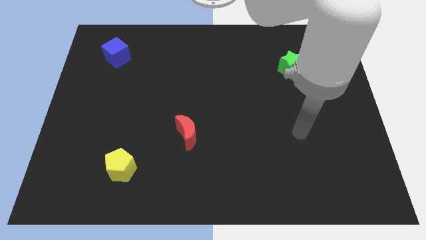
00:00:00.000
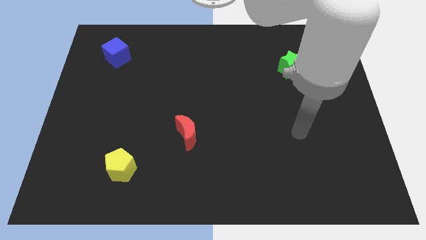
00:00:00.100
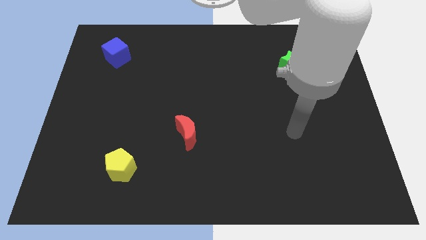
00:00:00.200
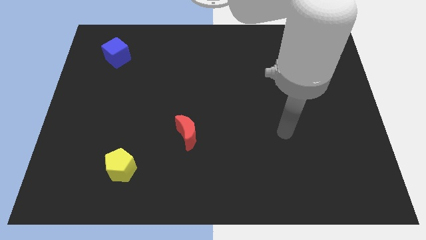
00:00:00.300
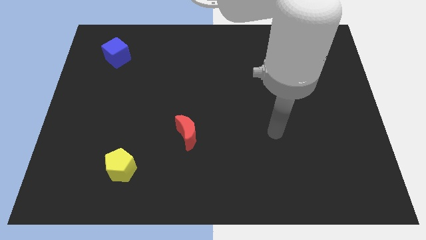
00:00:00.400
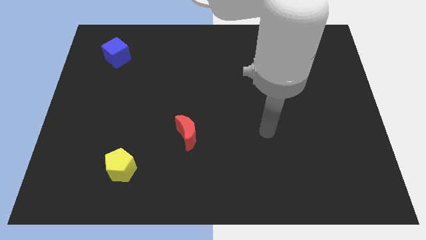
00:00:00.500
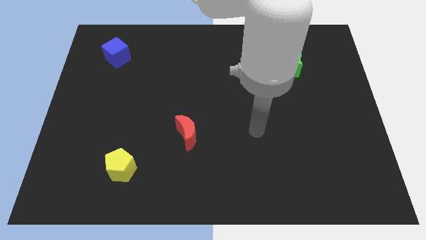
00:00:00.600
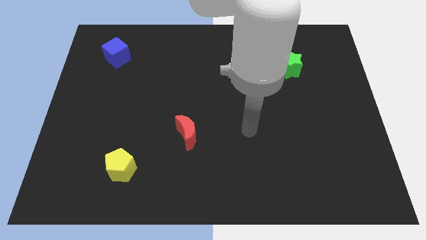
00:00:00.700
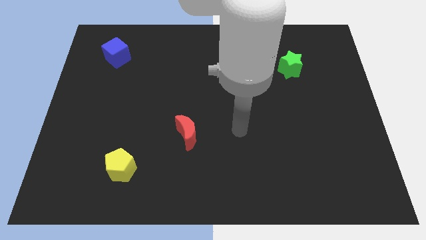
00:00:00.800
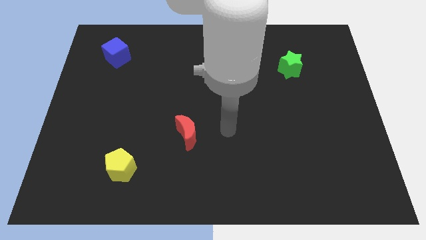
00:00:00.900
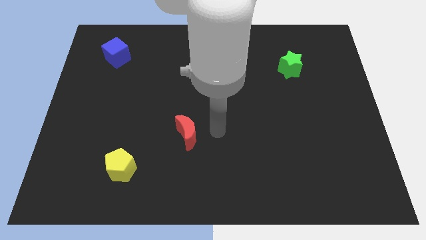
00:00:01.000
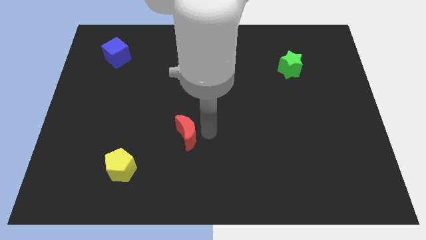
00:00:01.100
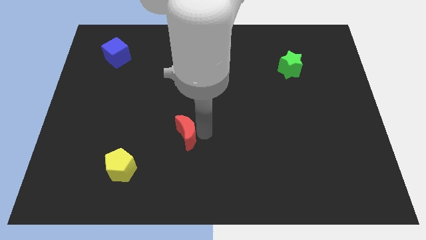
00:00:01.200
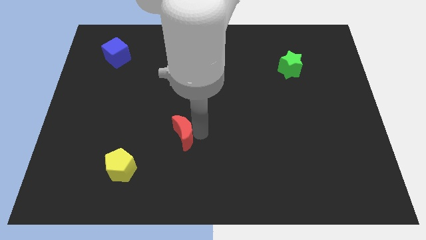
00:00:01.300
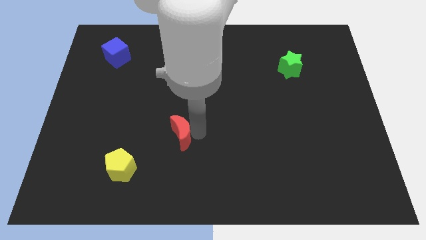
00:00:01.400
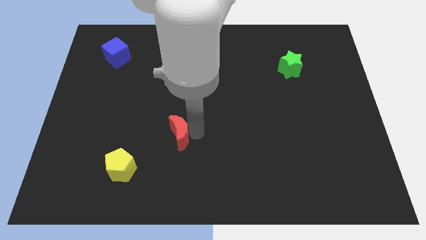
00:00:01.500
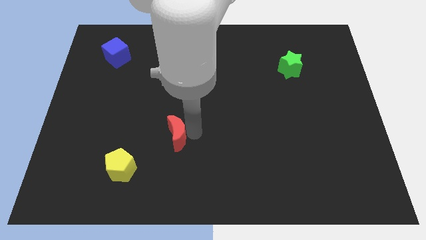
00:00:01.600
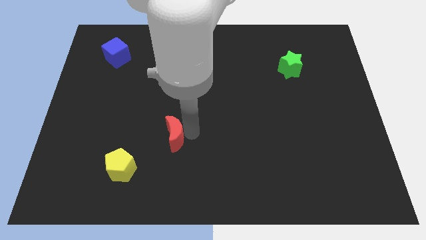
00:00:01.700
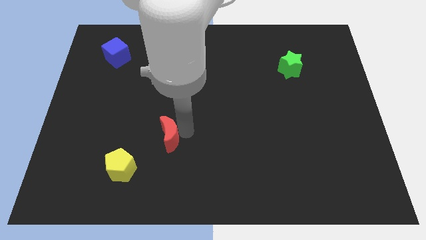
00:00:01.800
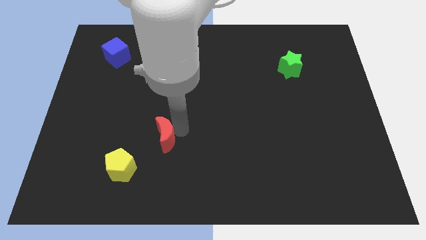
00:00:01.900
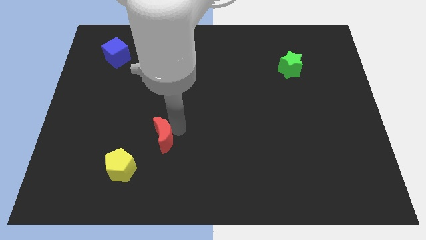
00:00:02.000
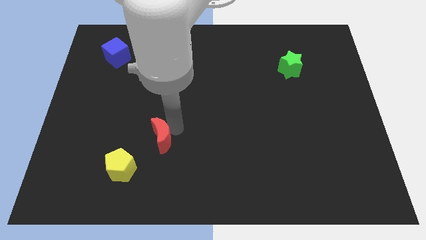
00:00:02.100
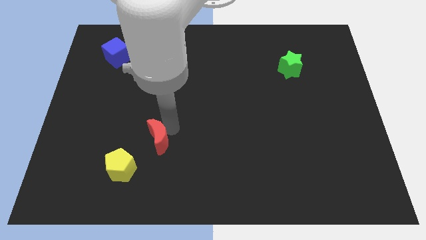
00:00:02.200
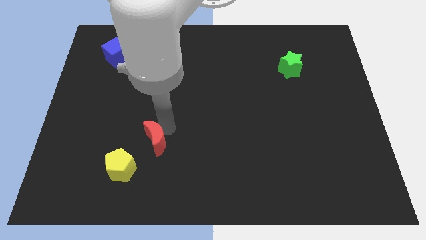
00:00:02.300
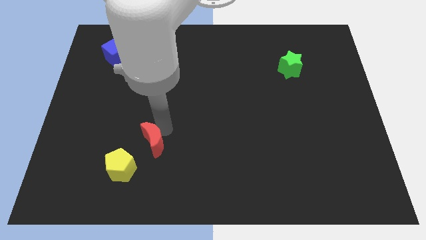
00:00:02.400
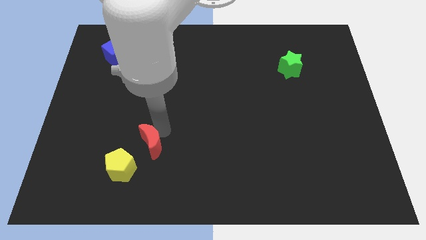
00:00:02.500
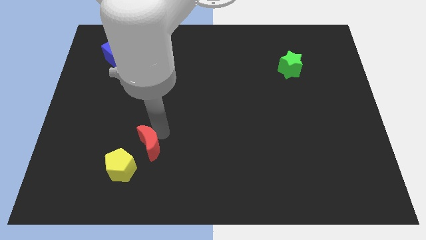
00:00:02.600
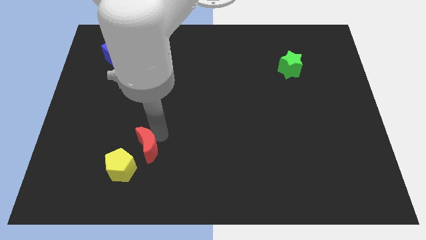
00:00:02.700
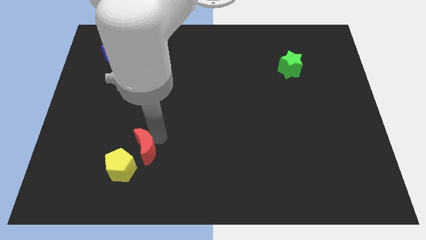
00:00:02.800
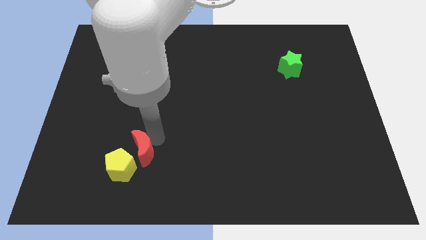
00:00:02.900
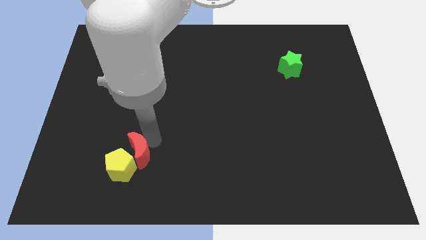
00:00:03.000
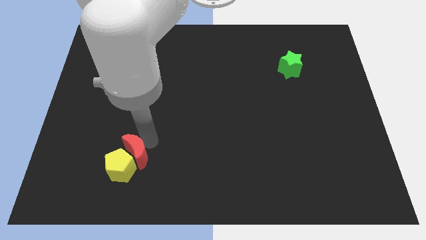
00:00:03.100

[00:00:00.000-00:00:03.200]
put the red moon next to the yellow pentagon

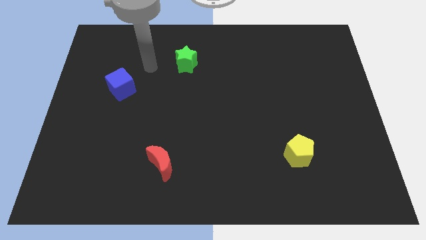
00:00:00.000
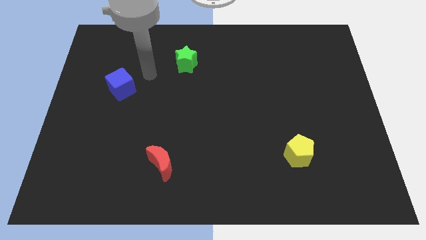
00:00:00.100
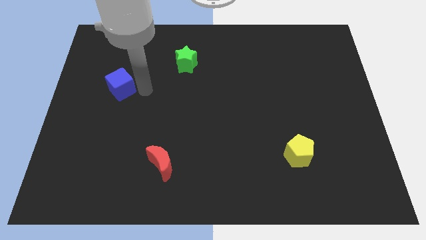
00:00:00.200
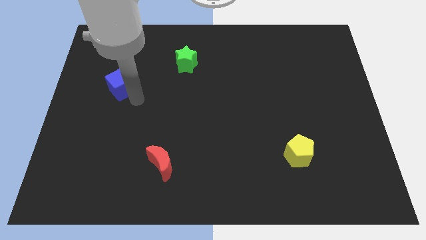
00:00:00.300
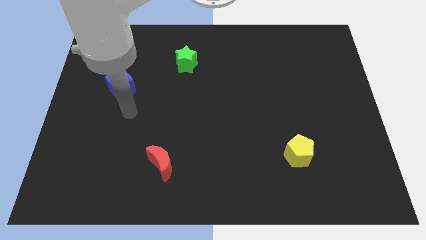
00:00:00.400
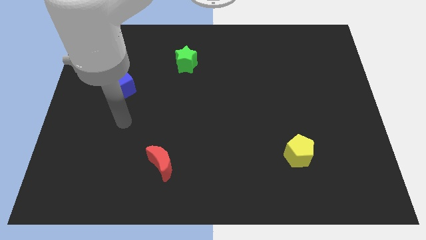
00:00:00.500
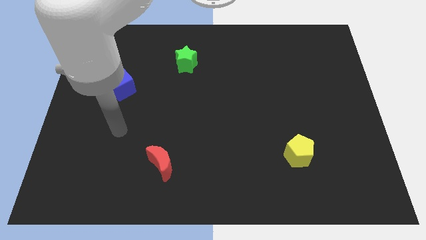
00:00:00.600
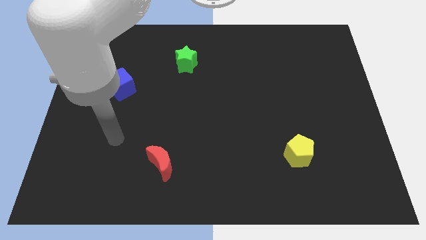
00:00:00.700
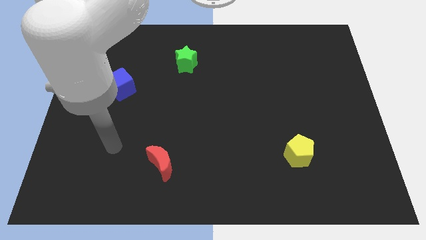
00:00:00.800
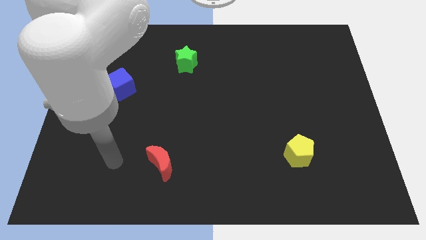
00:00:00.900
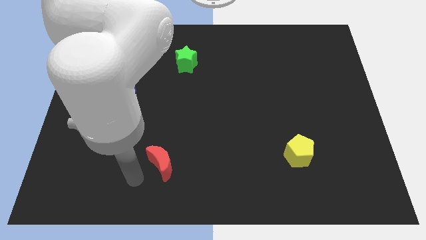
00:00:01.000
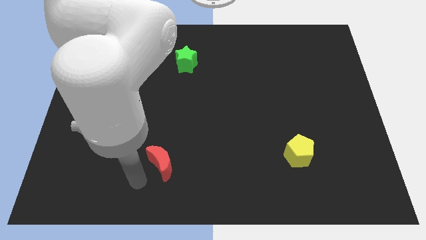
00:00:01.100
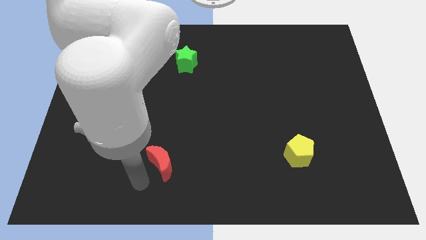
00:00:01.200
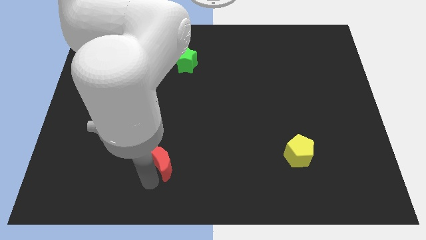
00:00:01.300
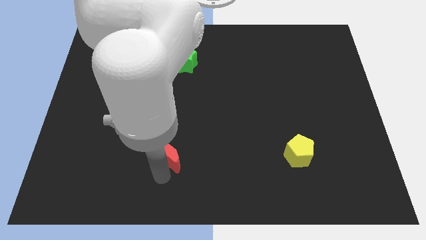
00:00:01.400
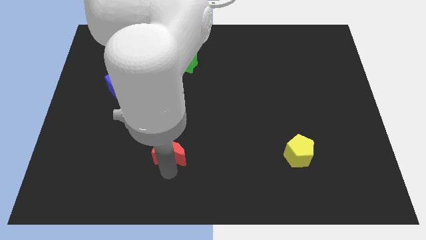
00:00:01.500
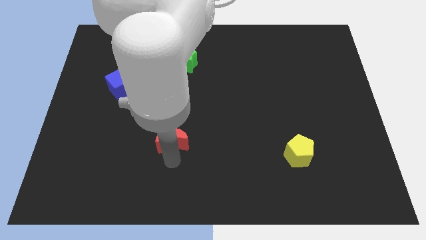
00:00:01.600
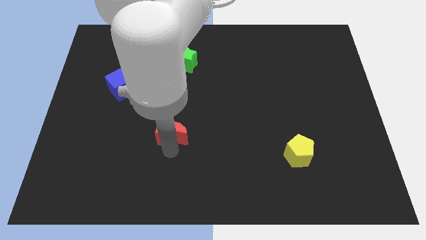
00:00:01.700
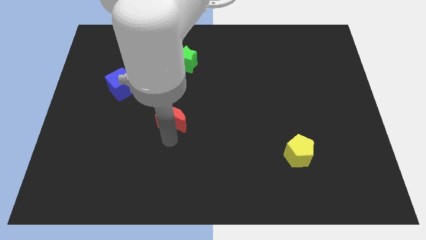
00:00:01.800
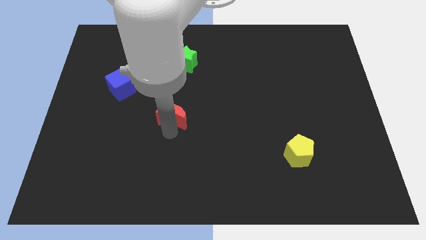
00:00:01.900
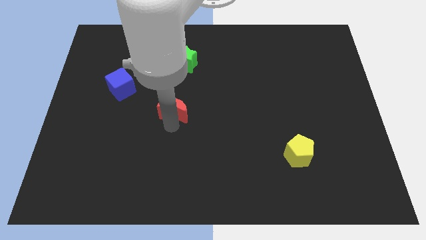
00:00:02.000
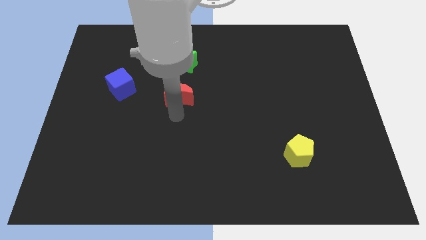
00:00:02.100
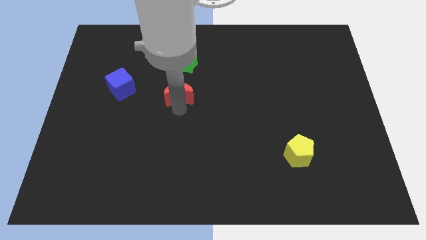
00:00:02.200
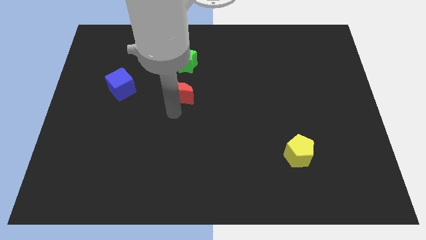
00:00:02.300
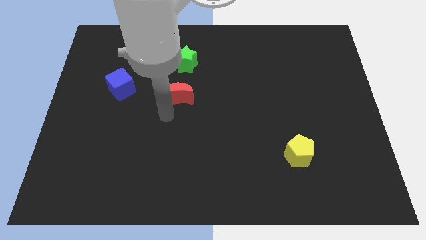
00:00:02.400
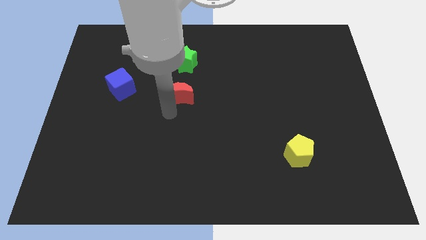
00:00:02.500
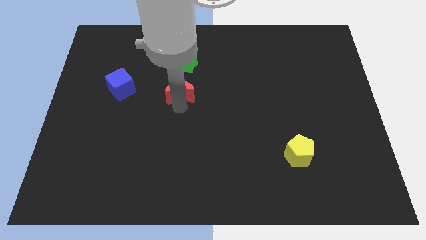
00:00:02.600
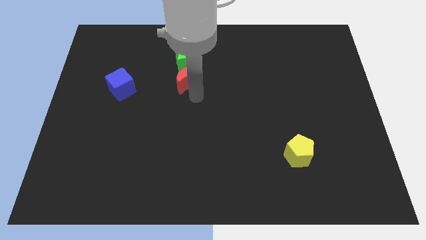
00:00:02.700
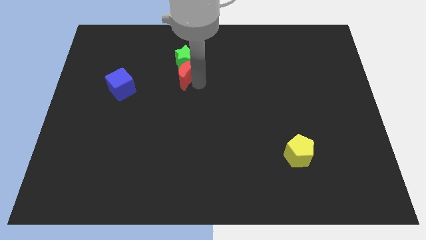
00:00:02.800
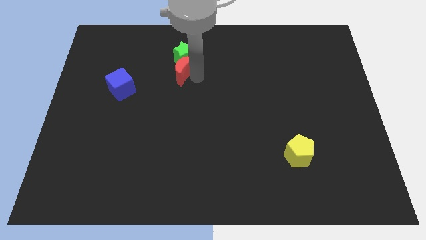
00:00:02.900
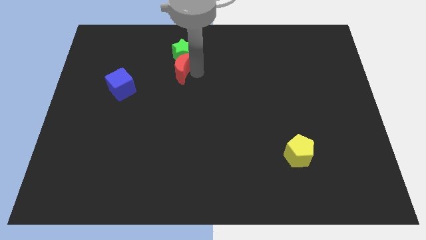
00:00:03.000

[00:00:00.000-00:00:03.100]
slide the red moon close to the green star

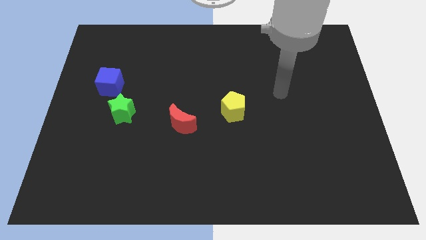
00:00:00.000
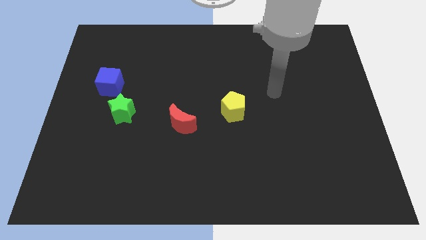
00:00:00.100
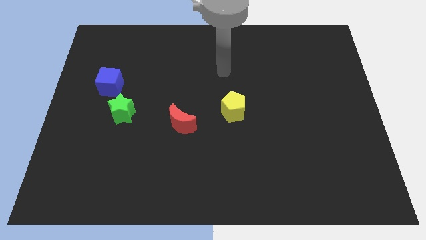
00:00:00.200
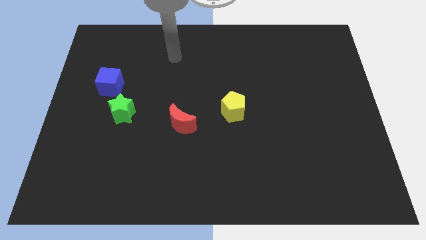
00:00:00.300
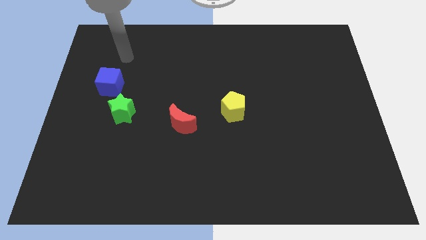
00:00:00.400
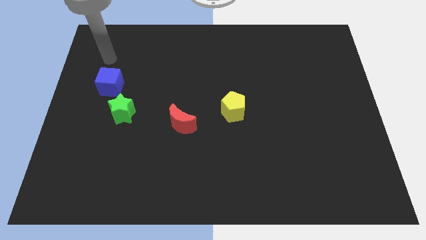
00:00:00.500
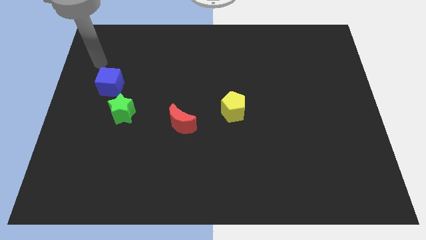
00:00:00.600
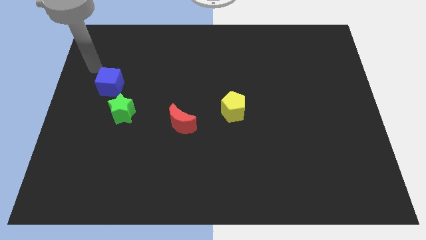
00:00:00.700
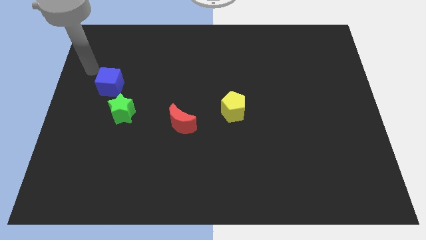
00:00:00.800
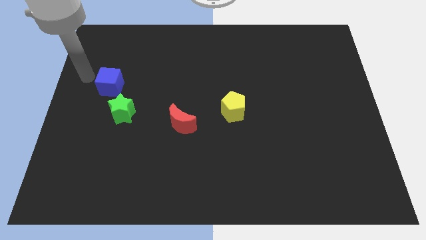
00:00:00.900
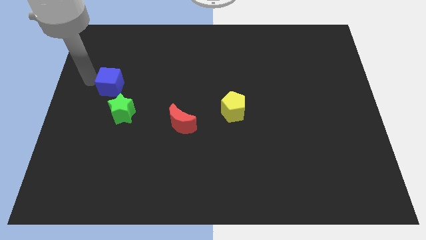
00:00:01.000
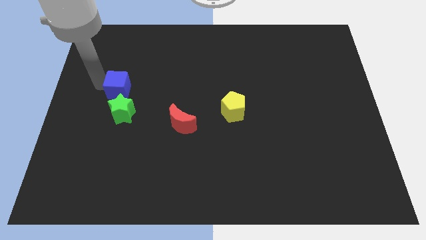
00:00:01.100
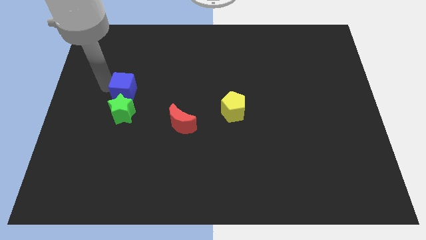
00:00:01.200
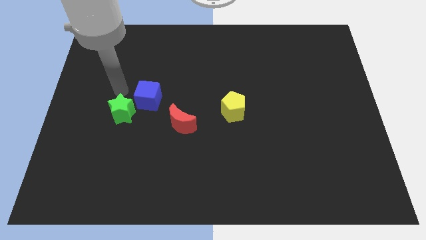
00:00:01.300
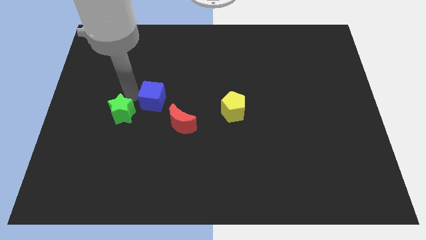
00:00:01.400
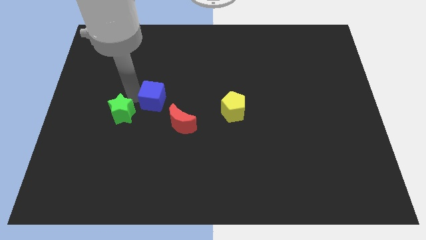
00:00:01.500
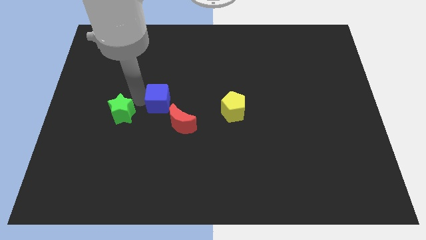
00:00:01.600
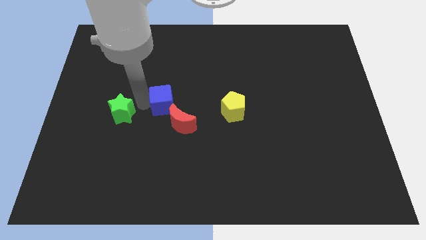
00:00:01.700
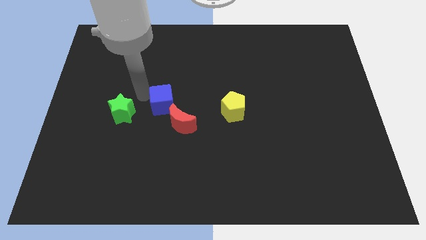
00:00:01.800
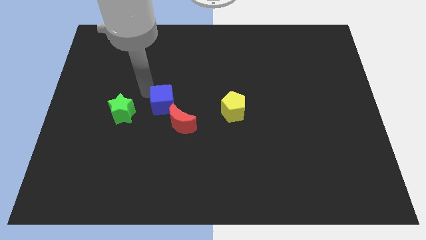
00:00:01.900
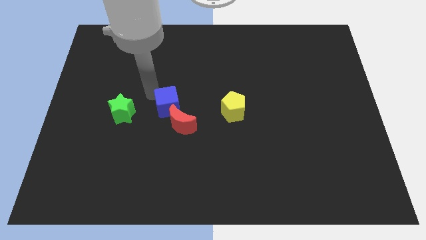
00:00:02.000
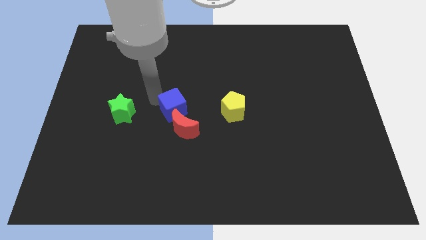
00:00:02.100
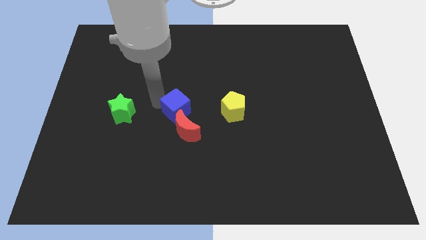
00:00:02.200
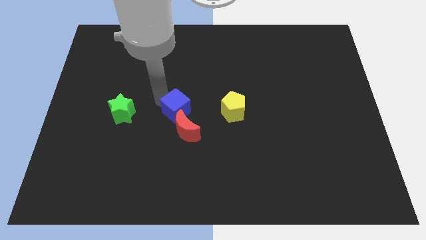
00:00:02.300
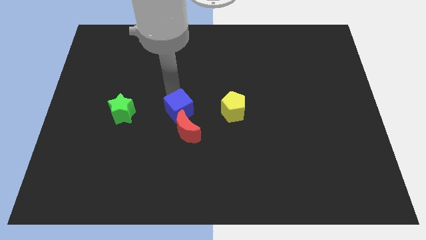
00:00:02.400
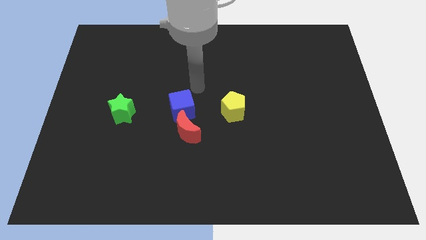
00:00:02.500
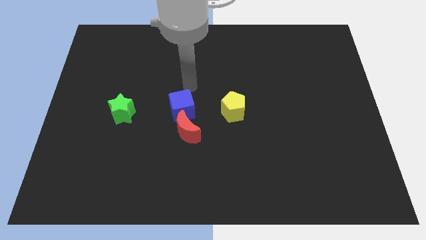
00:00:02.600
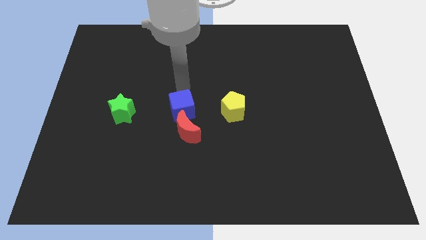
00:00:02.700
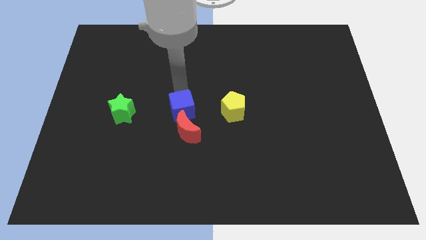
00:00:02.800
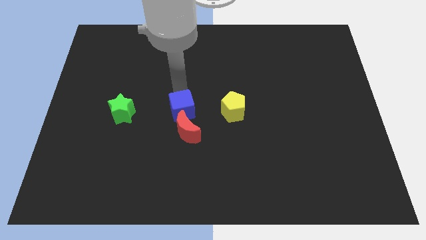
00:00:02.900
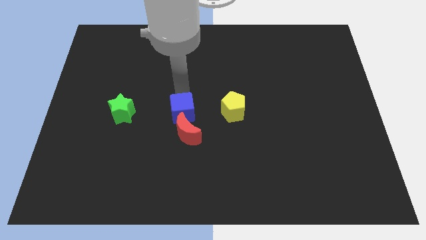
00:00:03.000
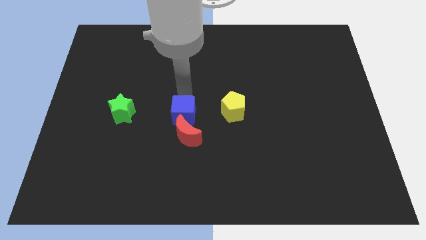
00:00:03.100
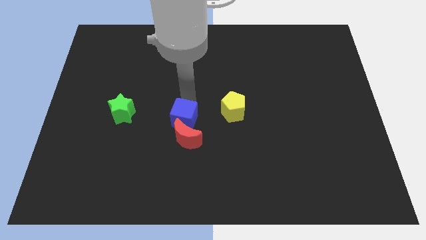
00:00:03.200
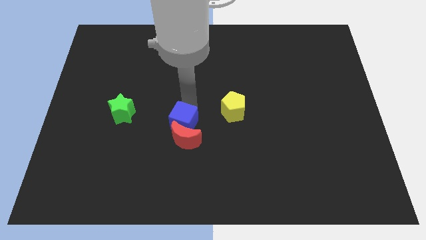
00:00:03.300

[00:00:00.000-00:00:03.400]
put the cube close to the moon
